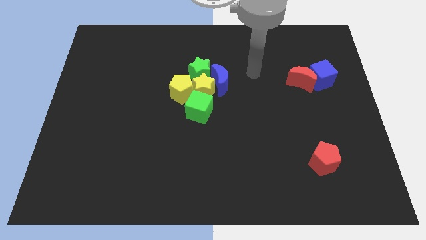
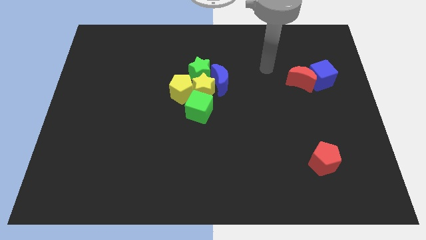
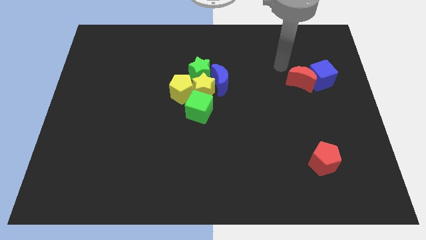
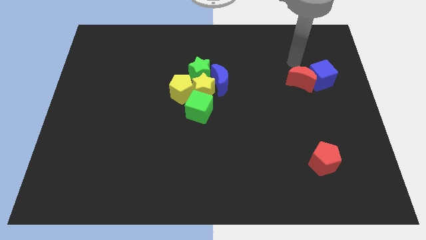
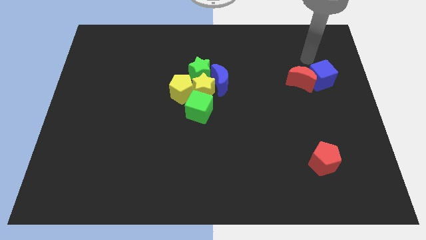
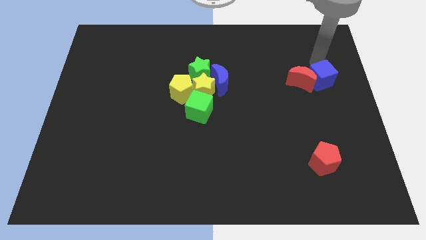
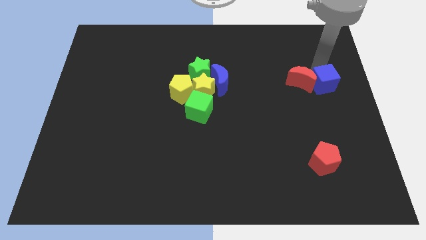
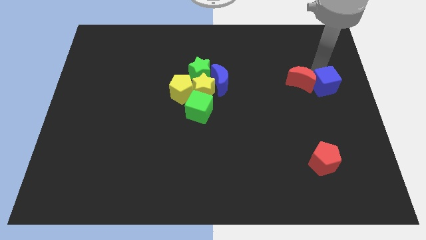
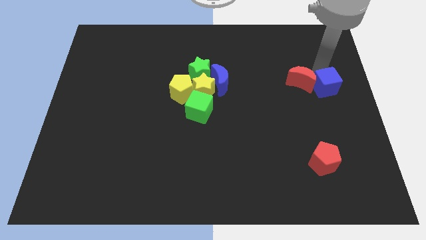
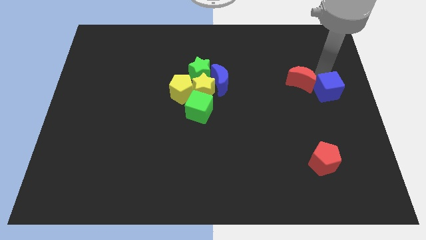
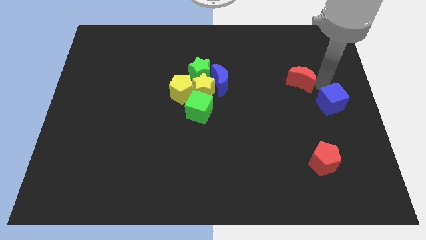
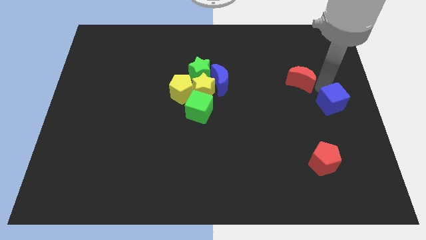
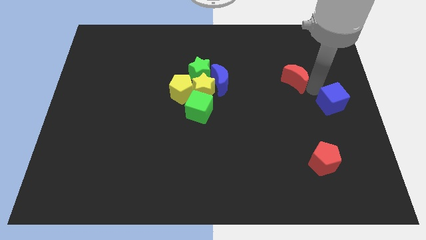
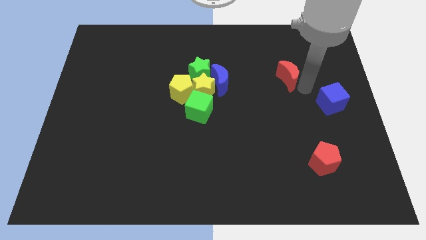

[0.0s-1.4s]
separate the red moon from the blue cube

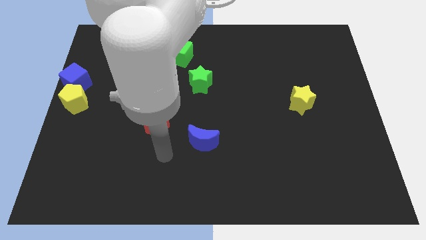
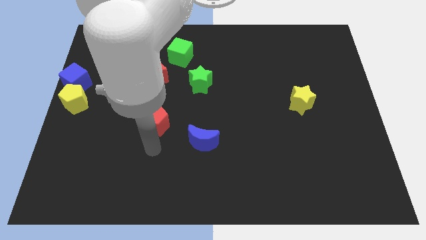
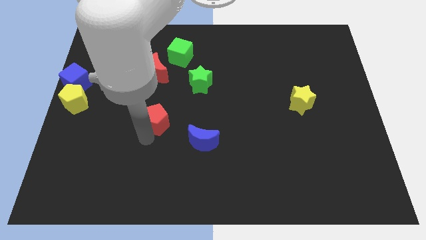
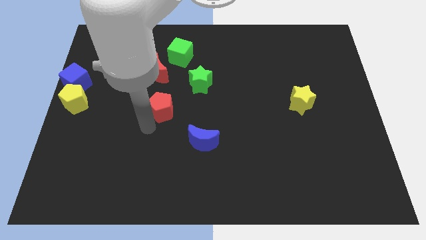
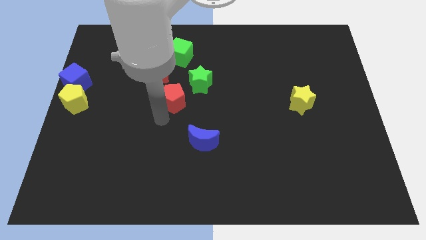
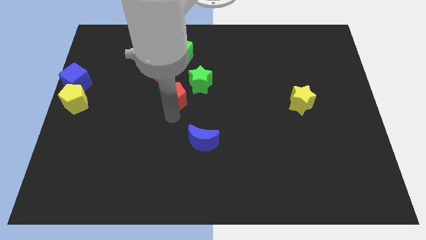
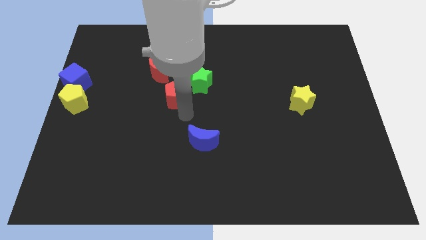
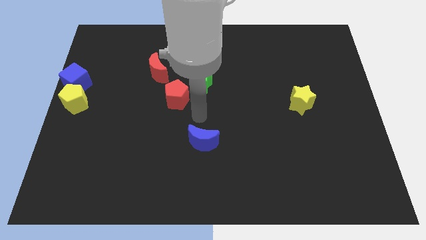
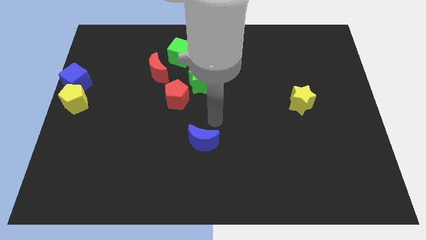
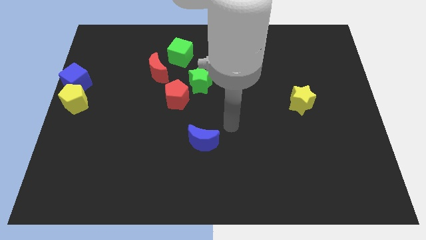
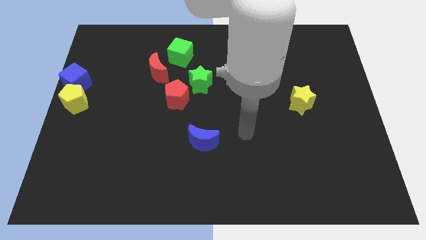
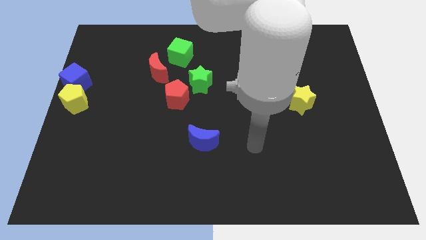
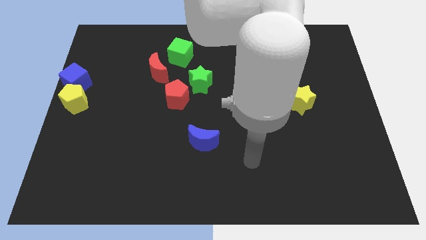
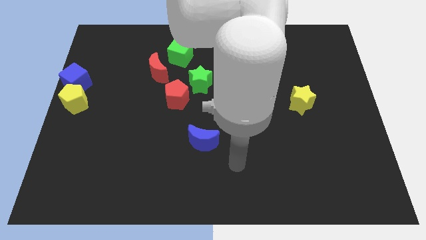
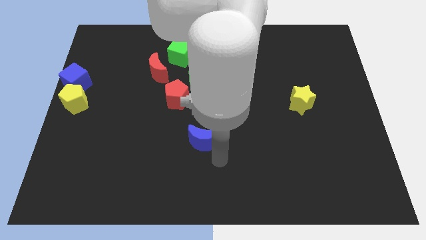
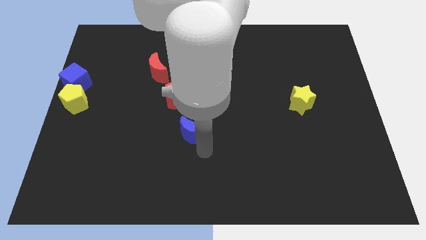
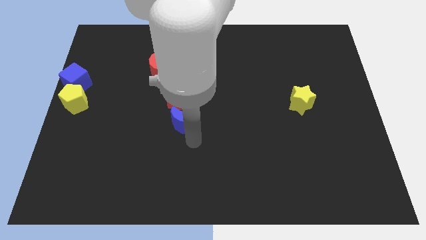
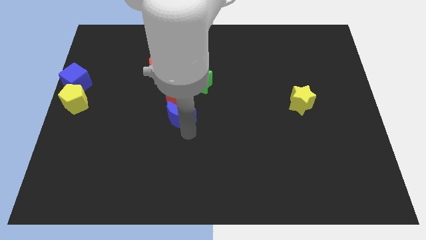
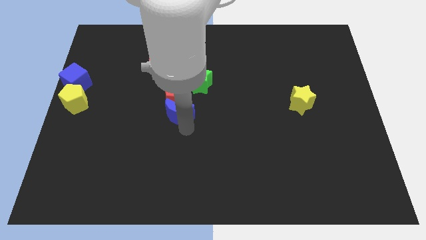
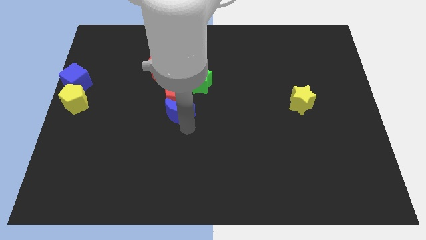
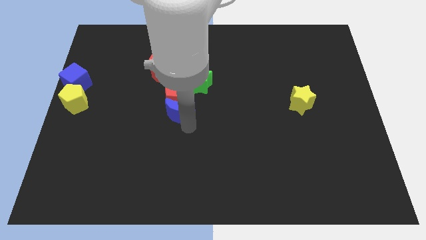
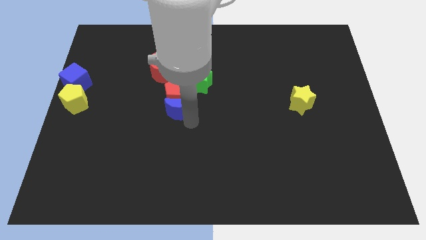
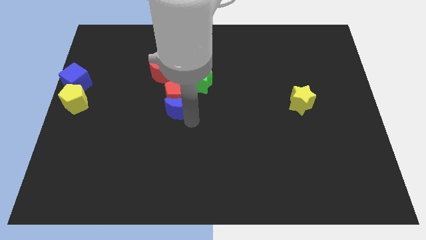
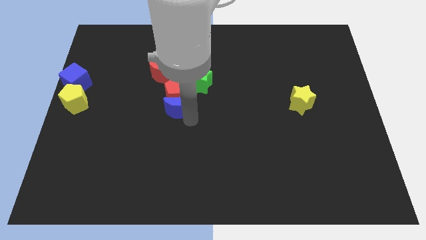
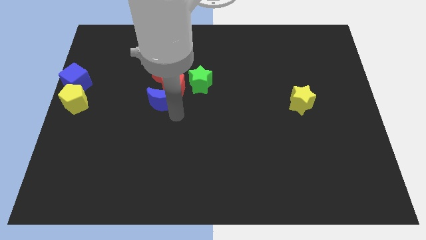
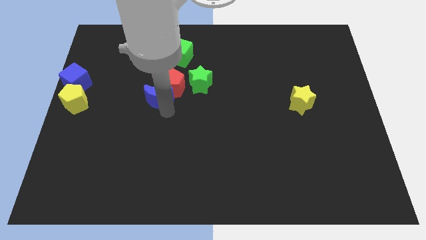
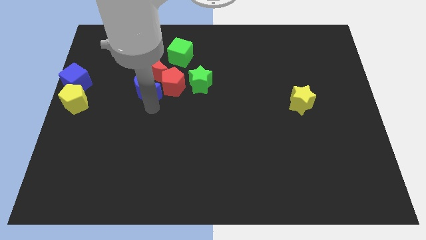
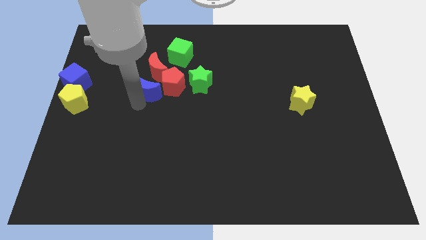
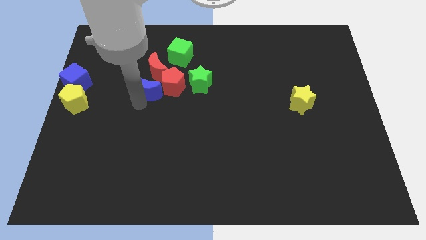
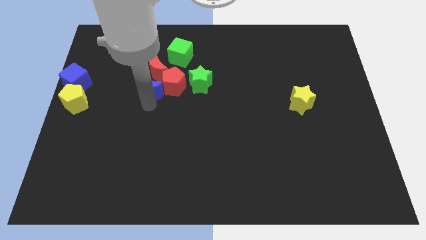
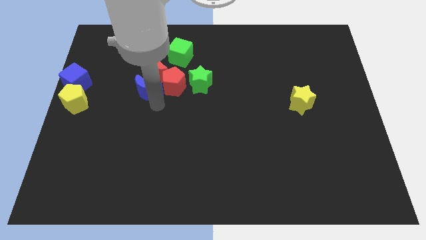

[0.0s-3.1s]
push the blue moon into the red pentagon

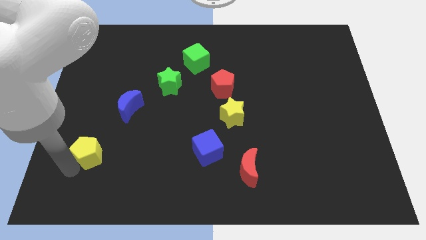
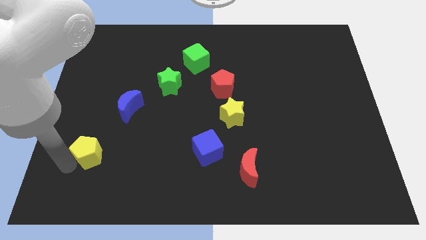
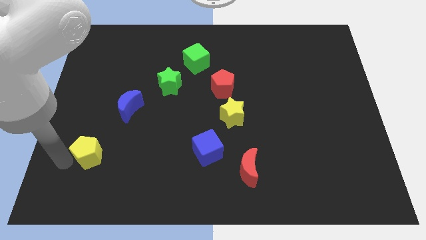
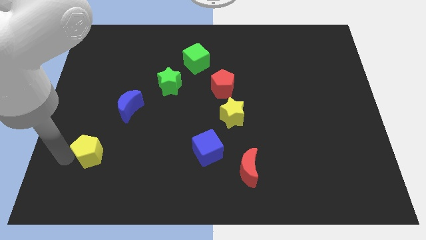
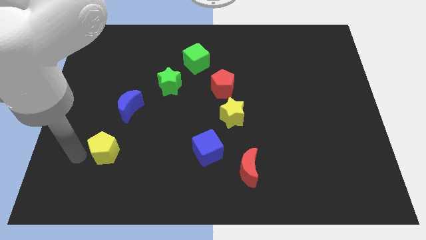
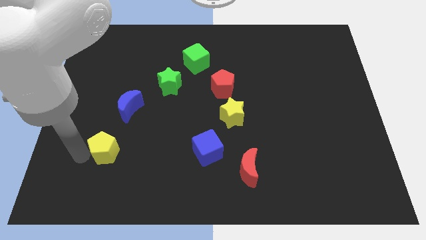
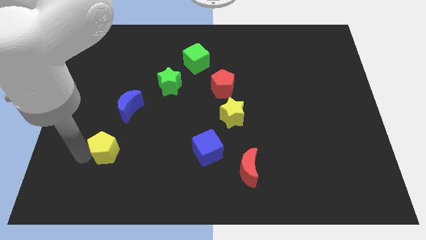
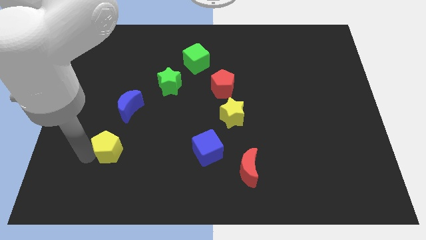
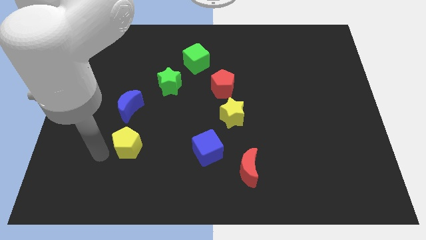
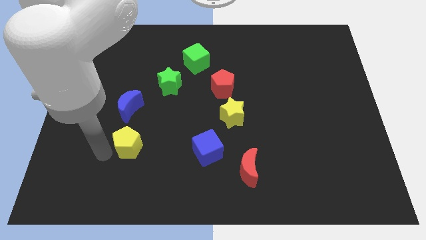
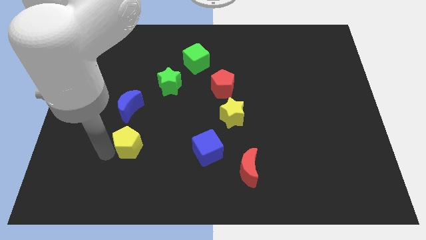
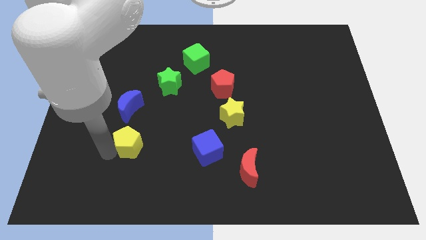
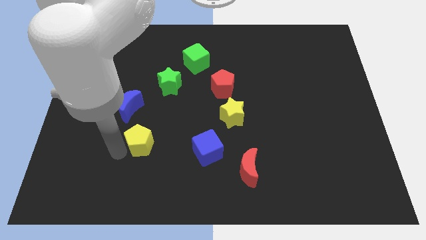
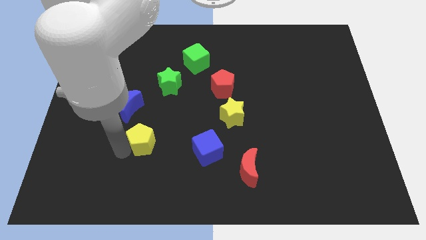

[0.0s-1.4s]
place yellow pentagon below the blue moon

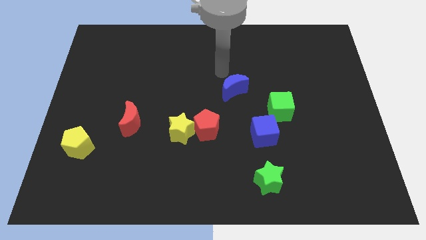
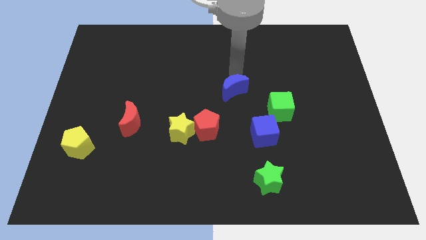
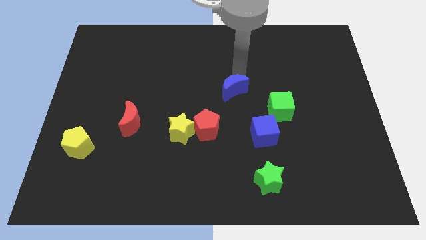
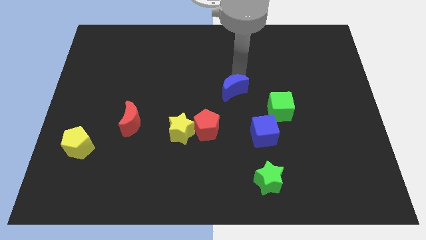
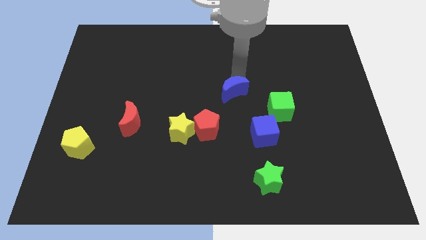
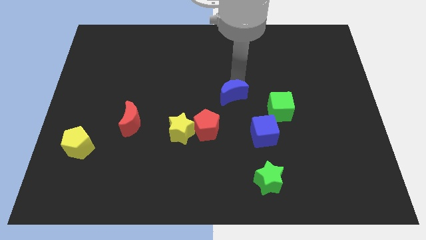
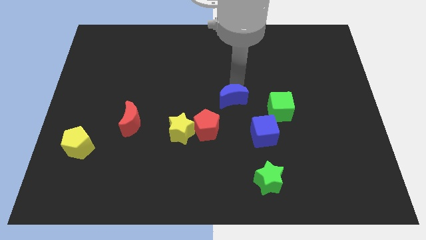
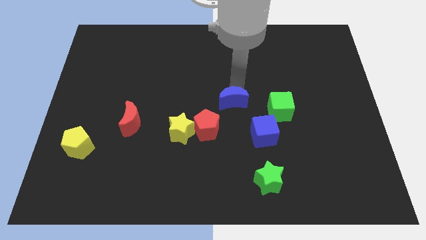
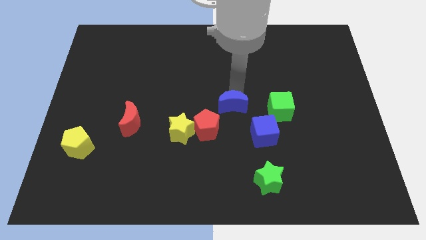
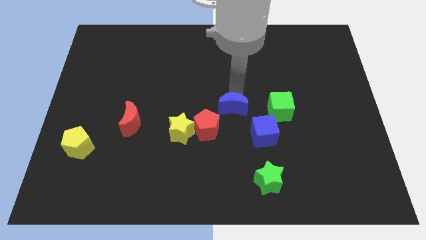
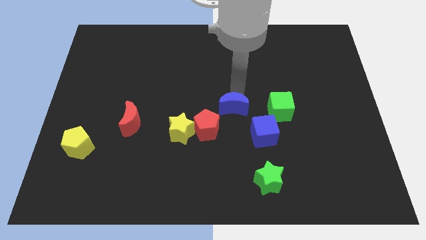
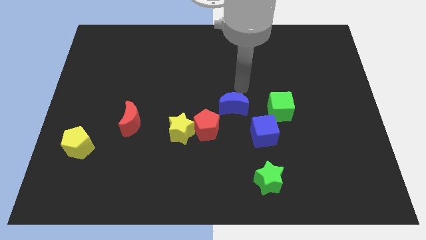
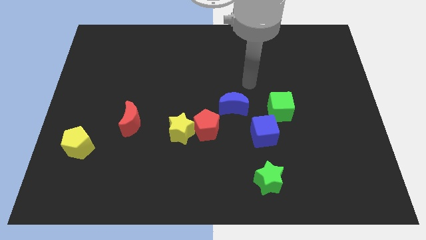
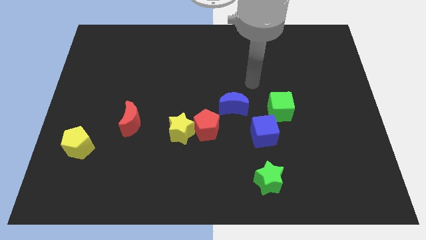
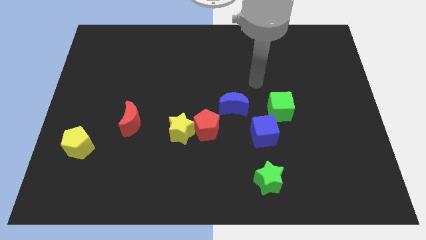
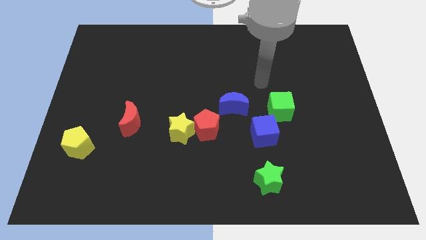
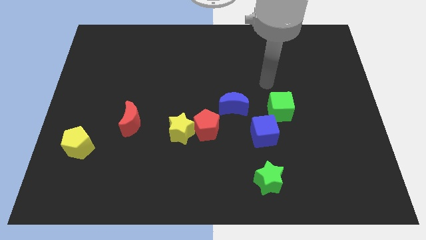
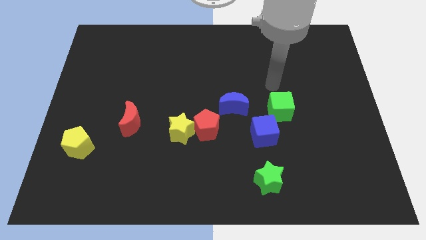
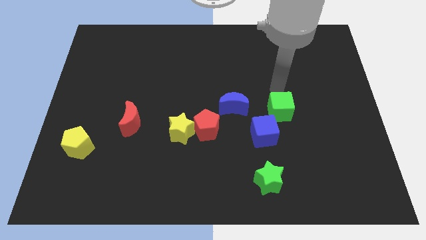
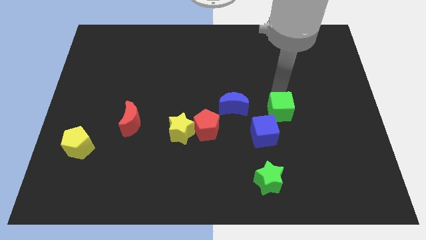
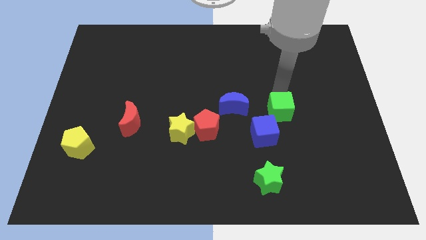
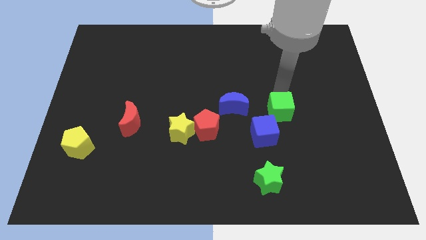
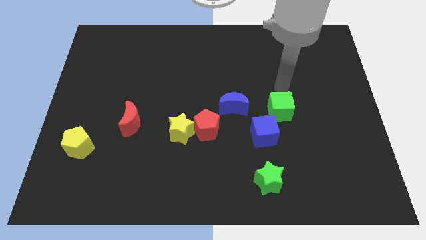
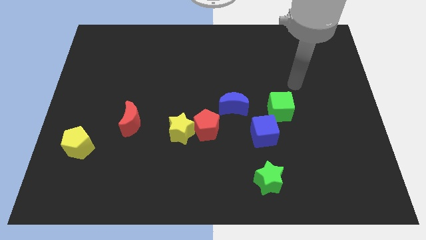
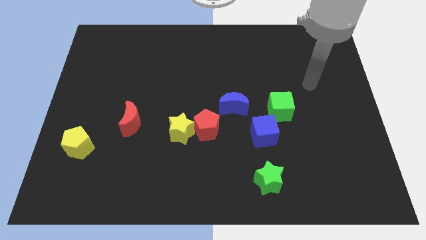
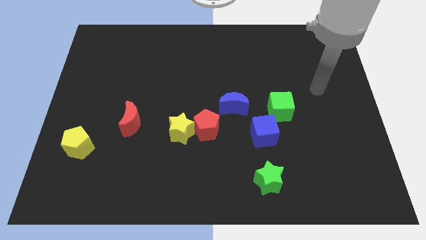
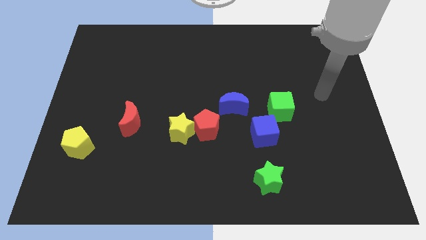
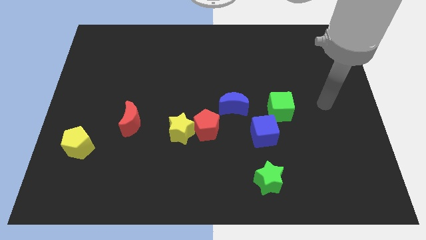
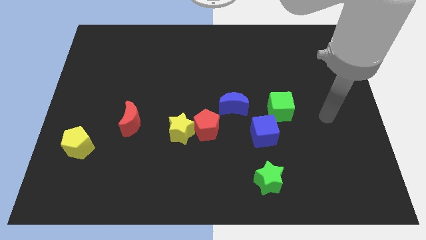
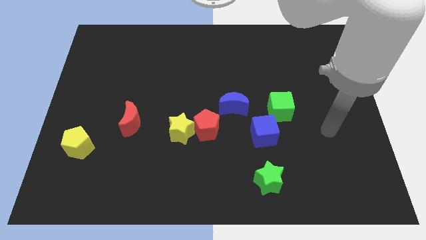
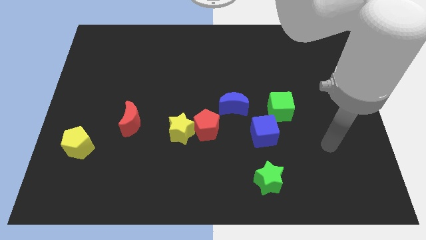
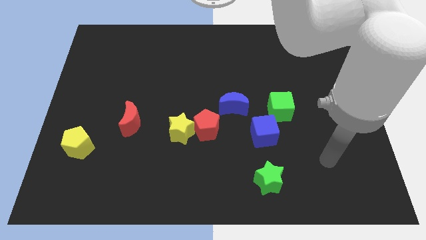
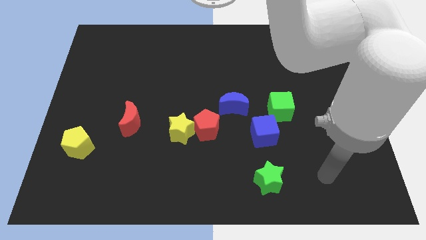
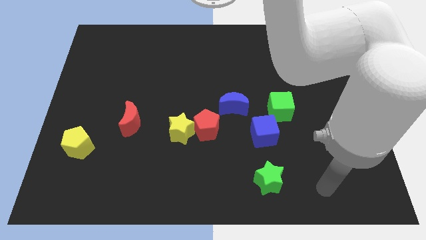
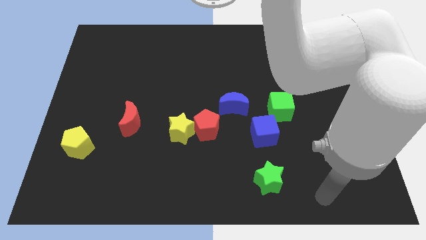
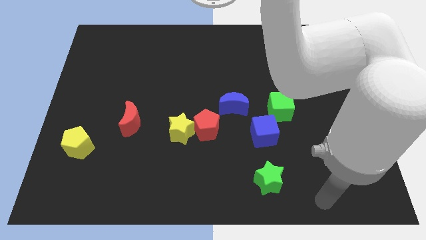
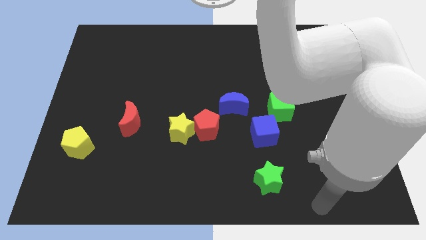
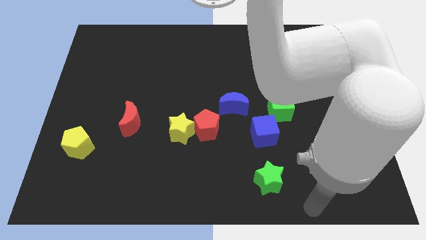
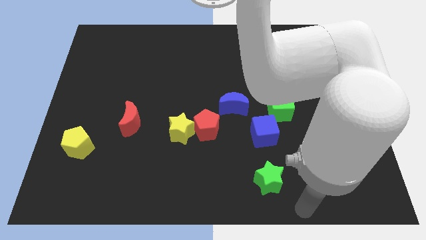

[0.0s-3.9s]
place the blue moon horizontally to the left side of the green cube
